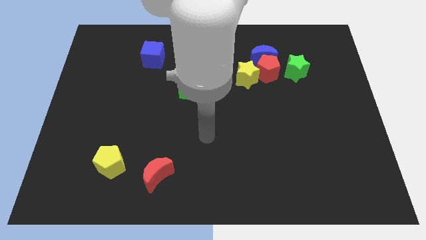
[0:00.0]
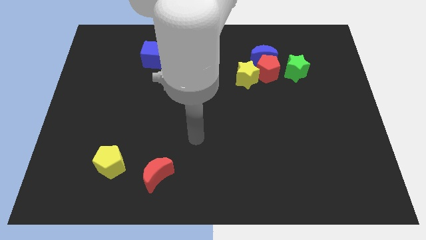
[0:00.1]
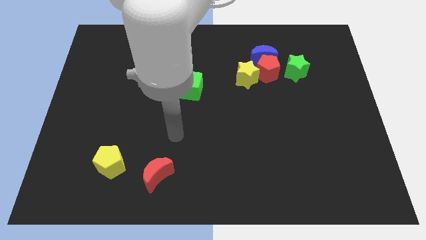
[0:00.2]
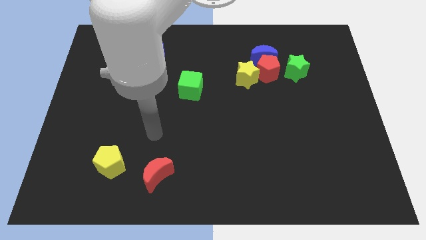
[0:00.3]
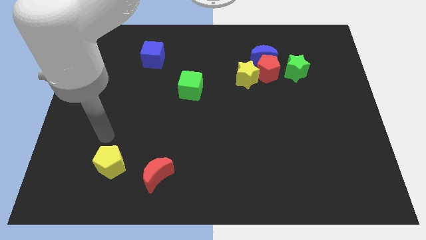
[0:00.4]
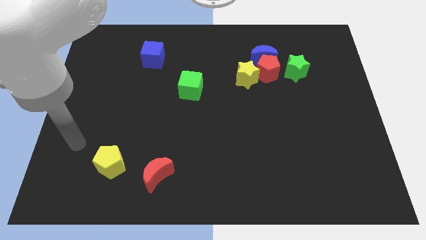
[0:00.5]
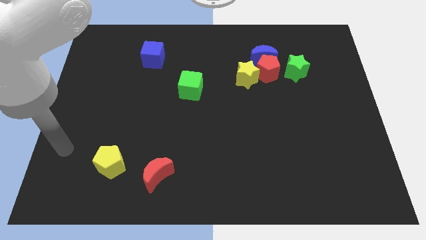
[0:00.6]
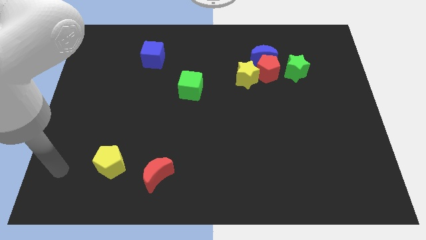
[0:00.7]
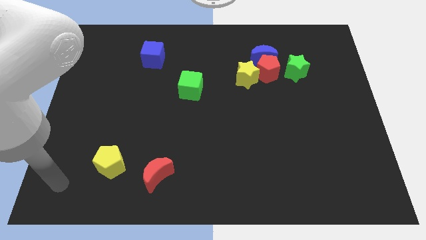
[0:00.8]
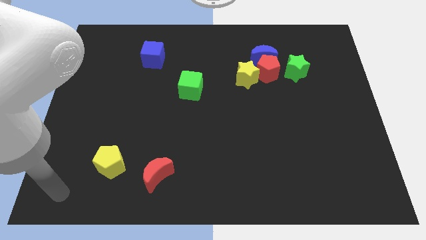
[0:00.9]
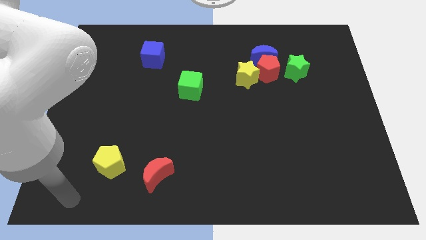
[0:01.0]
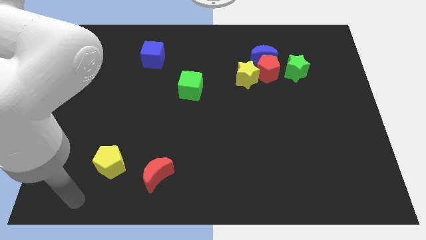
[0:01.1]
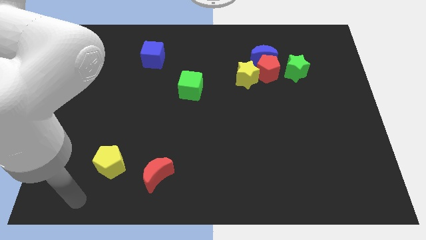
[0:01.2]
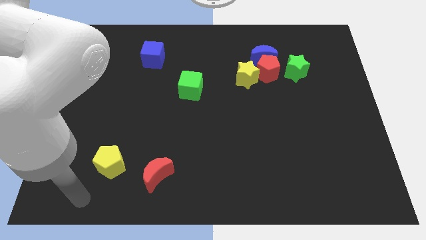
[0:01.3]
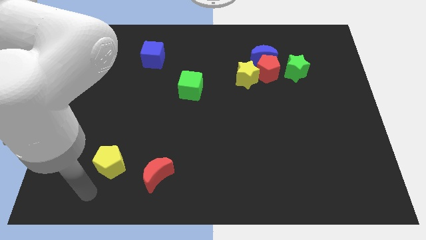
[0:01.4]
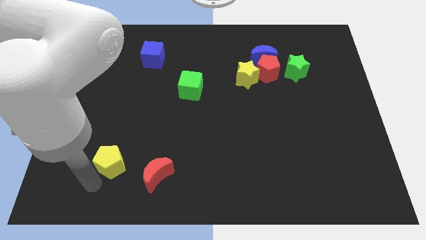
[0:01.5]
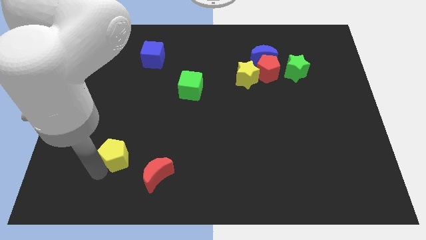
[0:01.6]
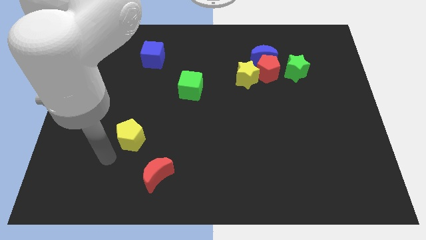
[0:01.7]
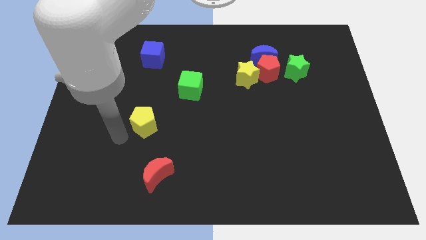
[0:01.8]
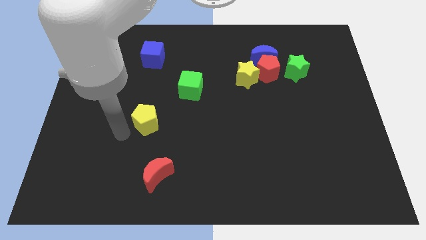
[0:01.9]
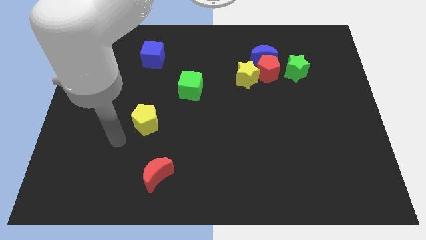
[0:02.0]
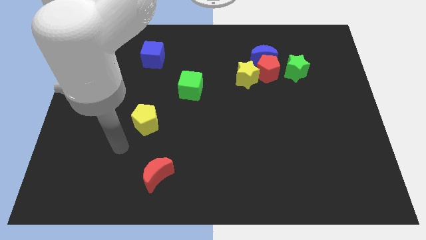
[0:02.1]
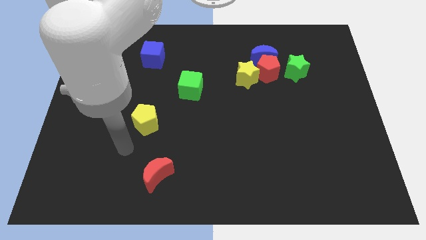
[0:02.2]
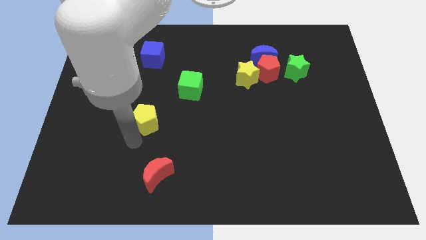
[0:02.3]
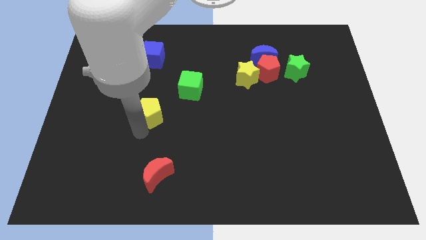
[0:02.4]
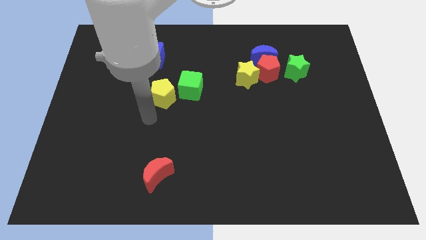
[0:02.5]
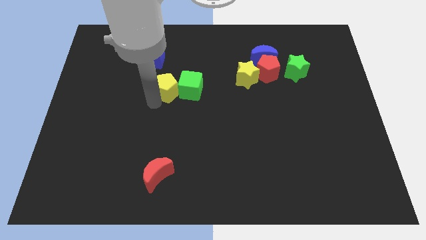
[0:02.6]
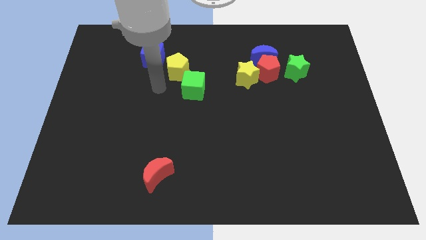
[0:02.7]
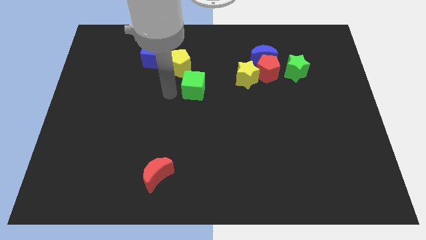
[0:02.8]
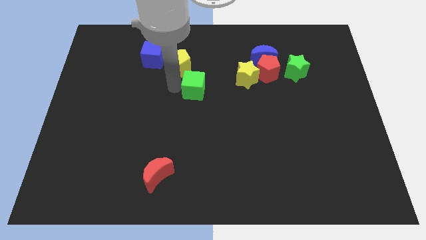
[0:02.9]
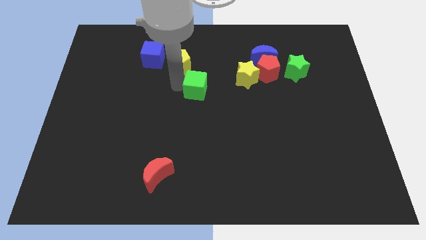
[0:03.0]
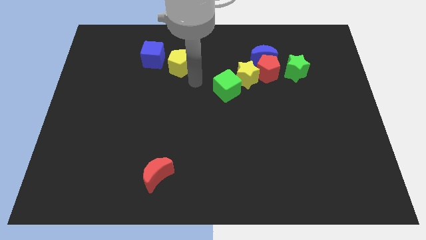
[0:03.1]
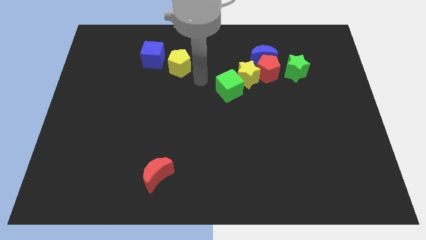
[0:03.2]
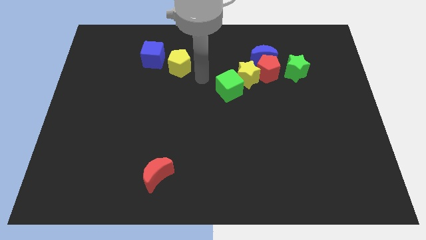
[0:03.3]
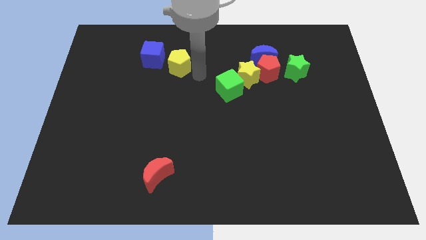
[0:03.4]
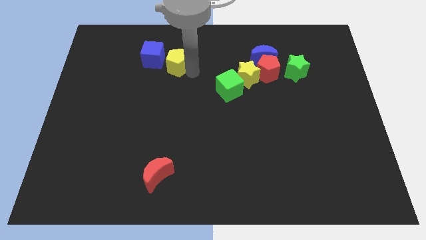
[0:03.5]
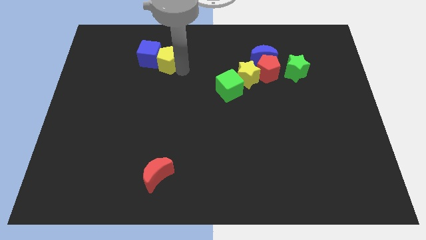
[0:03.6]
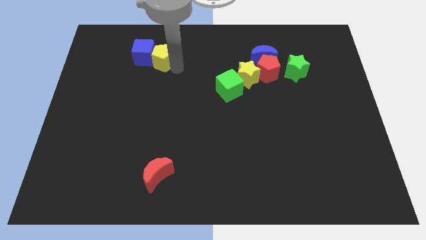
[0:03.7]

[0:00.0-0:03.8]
move the yellow pentagon to the blue cube

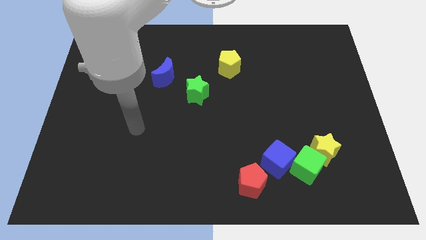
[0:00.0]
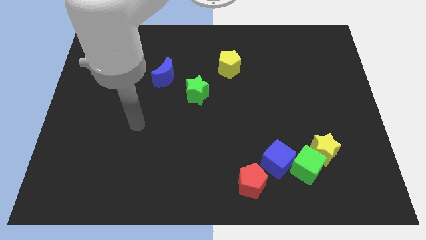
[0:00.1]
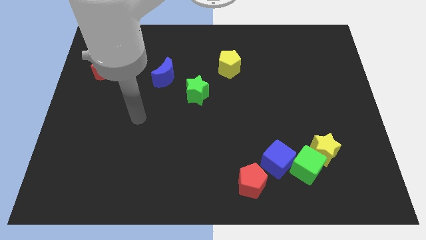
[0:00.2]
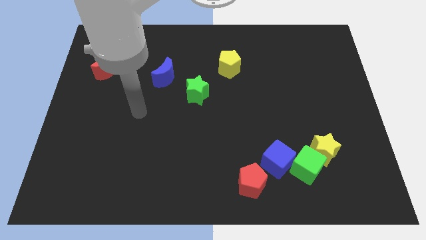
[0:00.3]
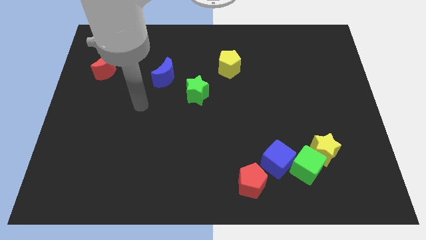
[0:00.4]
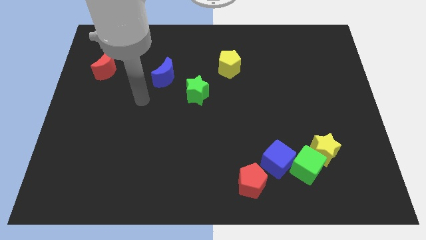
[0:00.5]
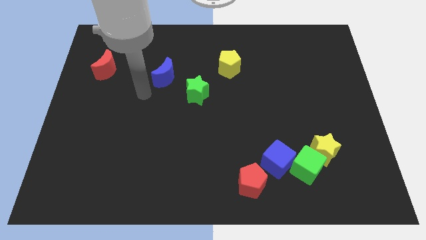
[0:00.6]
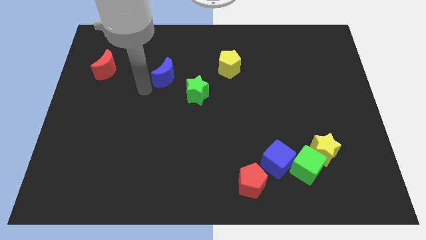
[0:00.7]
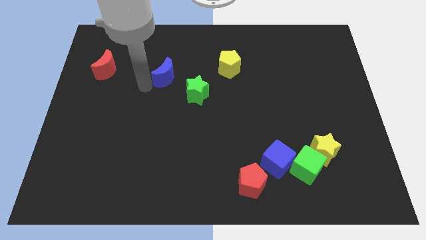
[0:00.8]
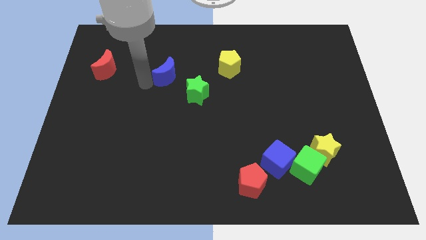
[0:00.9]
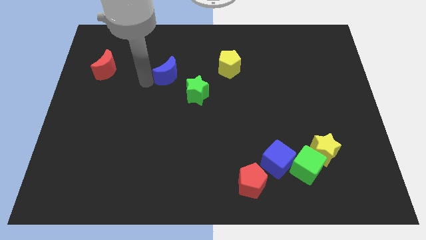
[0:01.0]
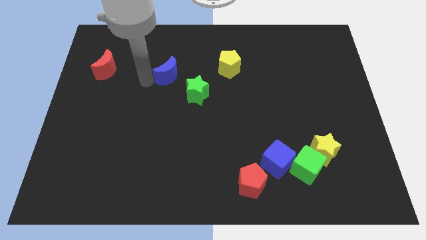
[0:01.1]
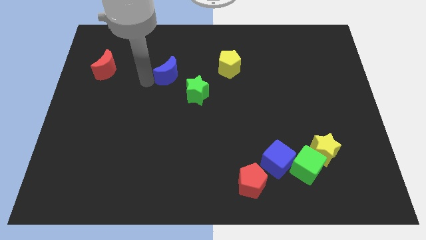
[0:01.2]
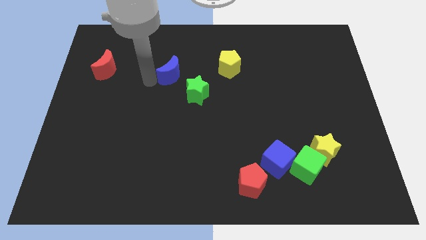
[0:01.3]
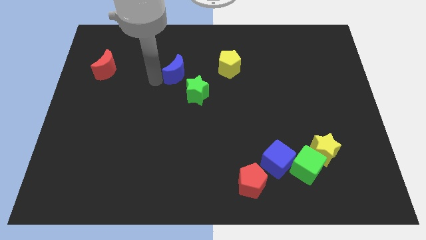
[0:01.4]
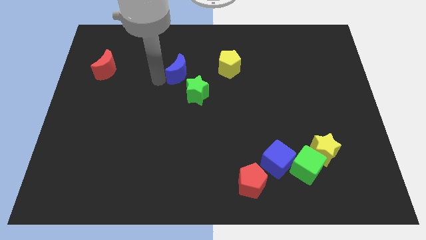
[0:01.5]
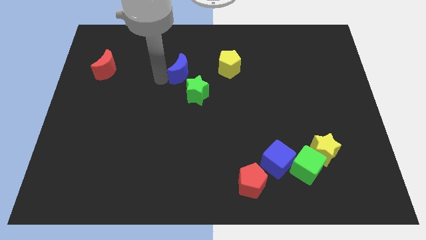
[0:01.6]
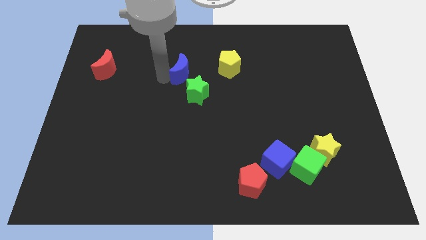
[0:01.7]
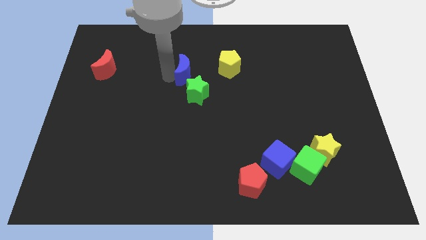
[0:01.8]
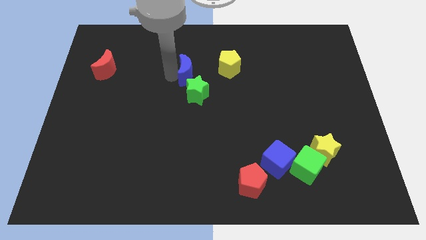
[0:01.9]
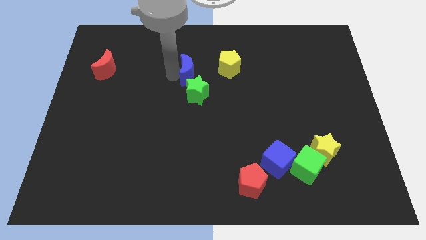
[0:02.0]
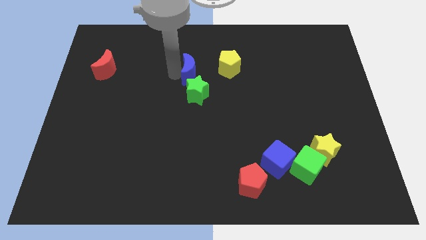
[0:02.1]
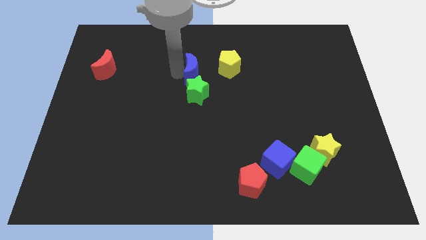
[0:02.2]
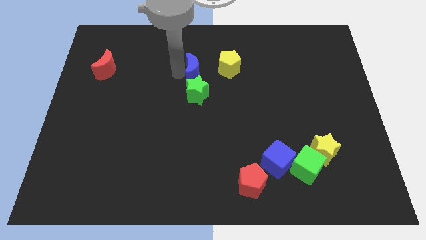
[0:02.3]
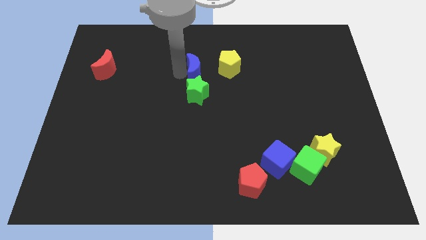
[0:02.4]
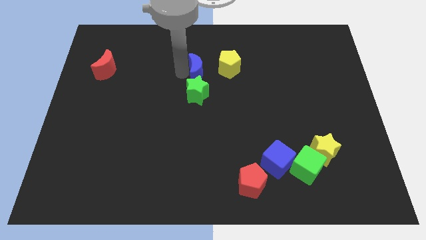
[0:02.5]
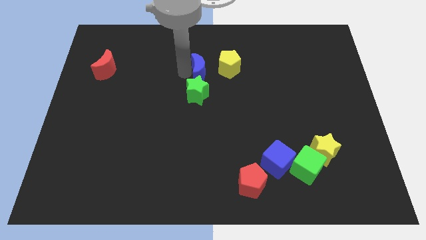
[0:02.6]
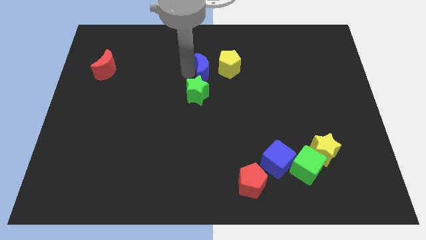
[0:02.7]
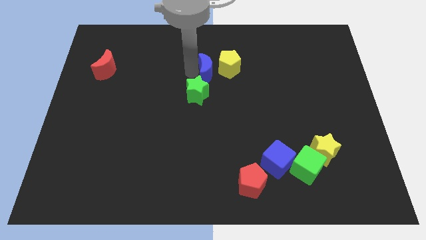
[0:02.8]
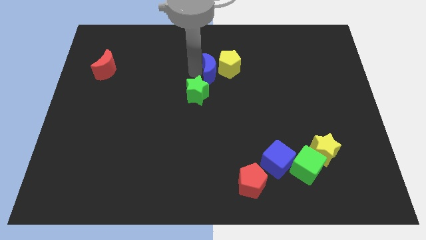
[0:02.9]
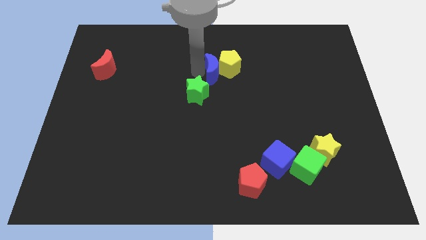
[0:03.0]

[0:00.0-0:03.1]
push the blue moon next to the yellow pentagon

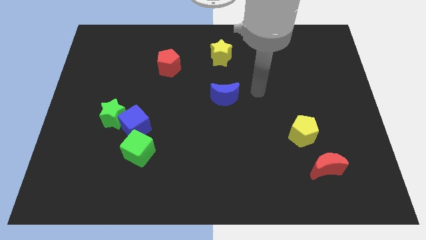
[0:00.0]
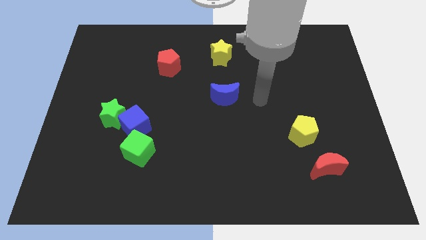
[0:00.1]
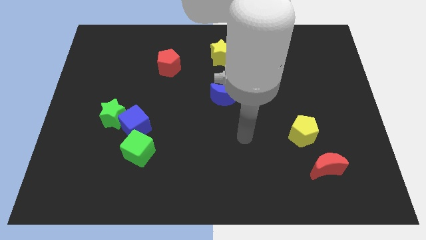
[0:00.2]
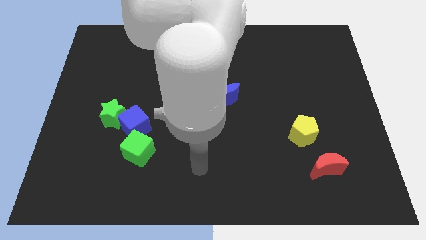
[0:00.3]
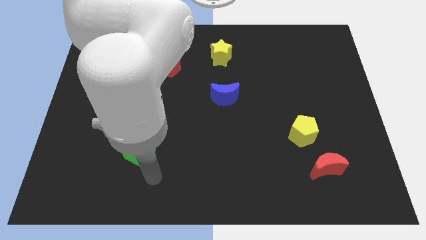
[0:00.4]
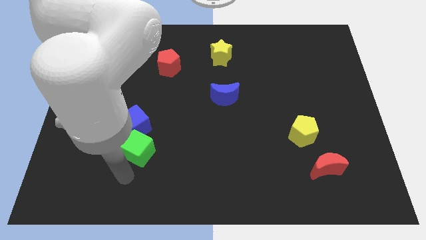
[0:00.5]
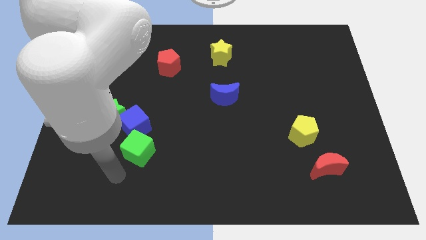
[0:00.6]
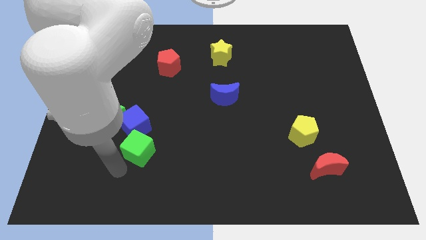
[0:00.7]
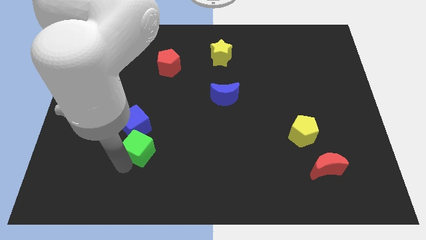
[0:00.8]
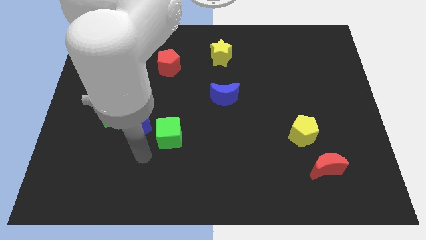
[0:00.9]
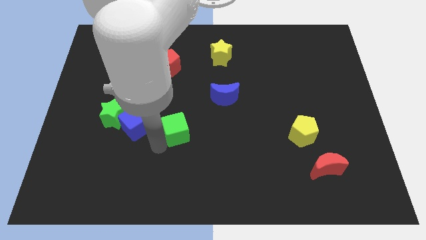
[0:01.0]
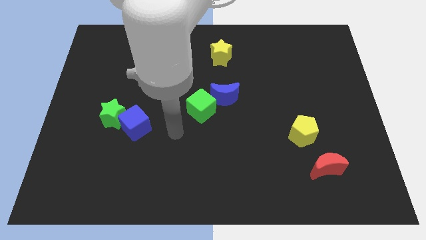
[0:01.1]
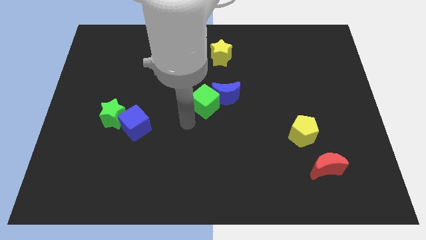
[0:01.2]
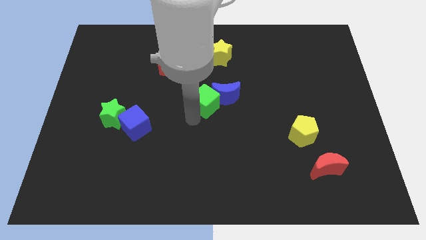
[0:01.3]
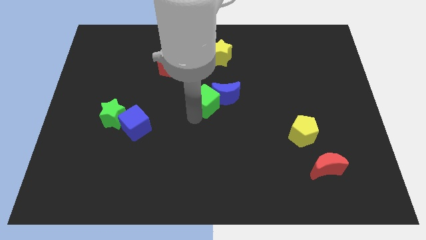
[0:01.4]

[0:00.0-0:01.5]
put the green cube to the blue moon
